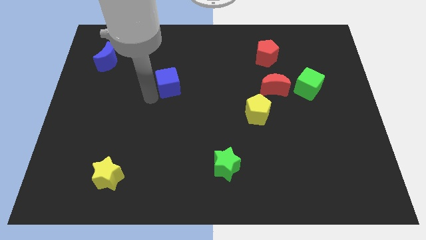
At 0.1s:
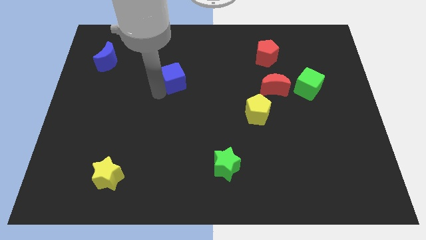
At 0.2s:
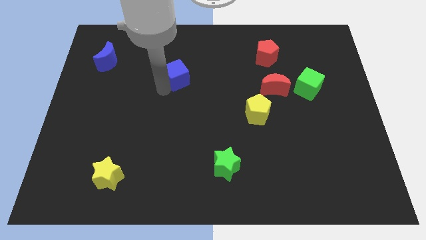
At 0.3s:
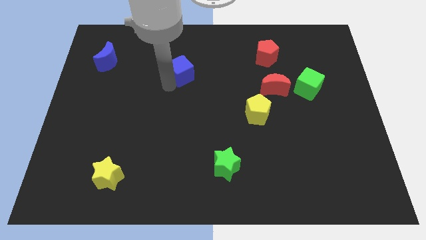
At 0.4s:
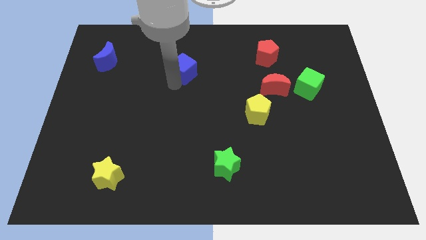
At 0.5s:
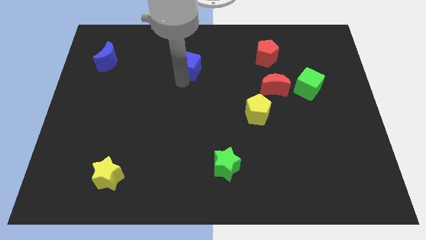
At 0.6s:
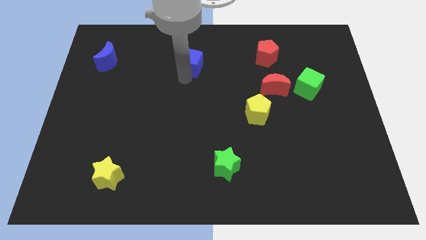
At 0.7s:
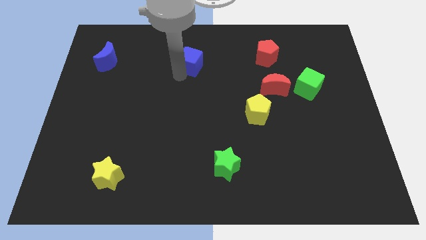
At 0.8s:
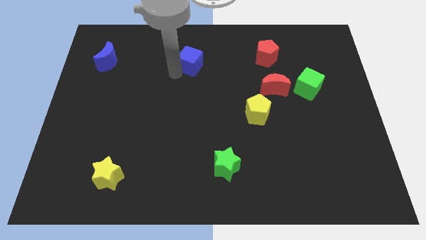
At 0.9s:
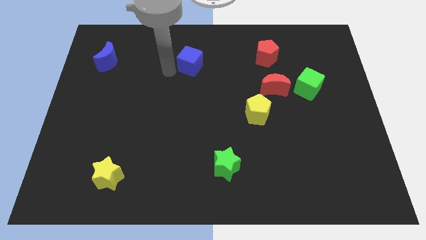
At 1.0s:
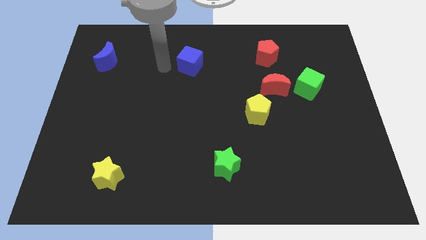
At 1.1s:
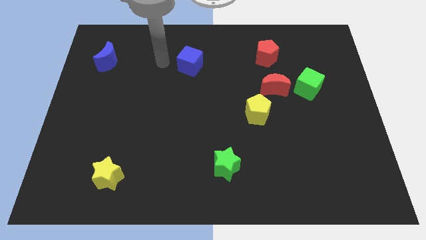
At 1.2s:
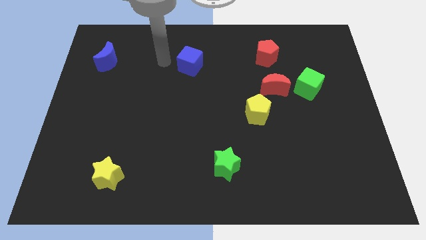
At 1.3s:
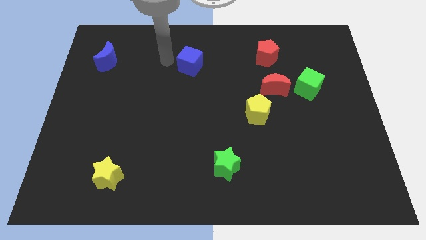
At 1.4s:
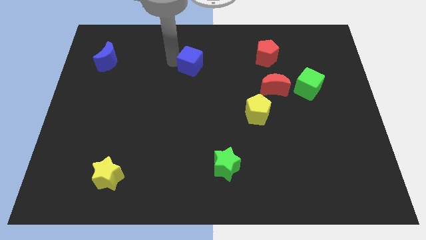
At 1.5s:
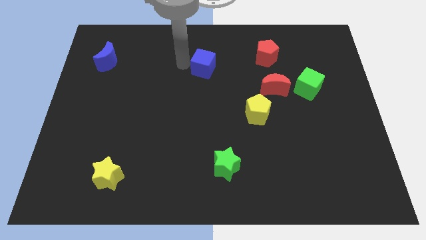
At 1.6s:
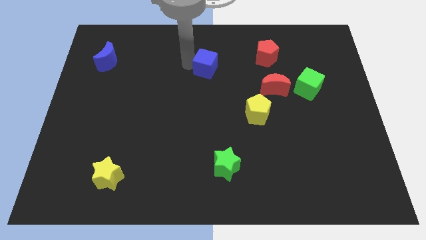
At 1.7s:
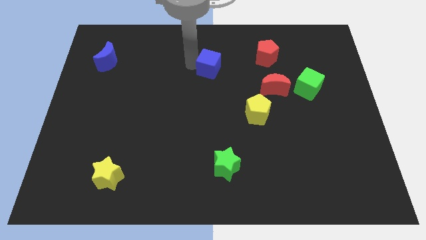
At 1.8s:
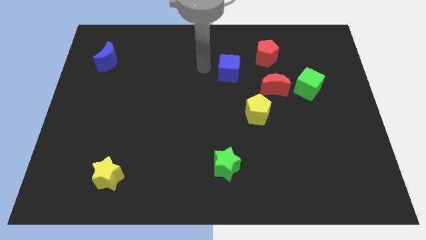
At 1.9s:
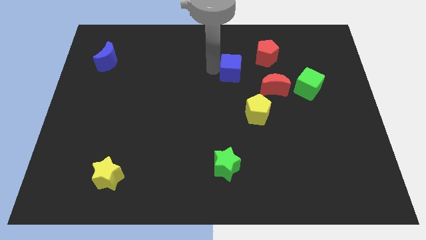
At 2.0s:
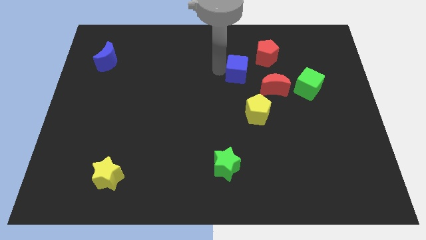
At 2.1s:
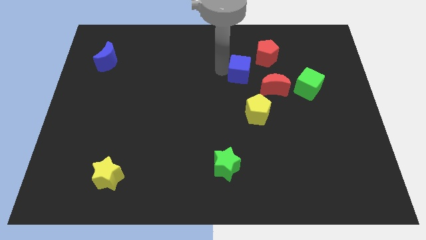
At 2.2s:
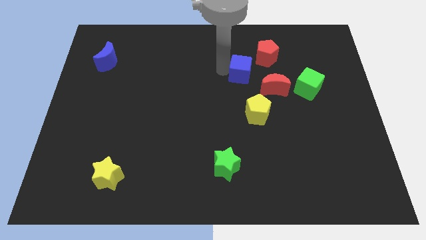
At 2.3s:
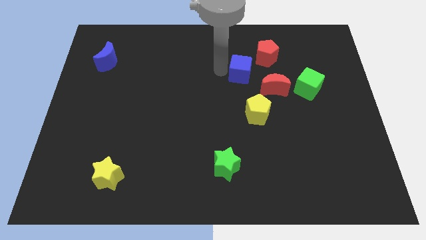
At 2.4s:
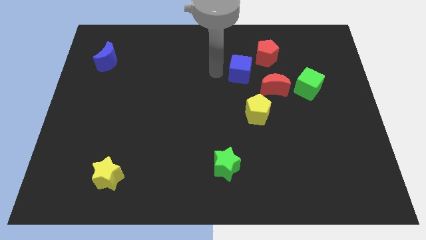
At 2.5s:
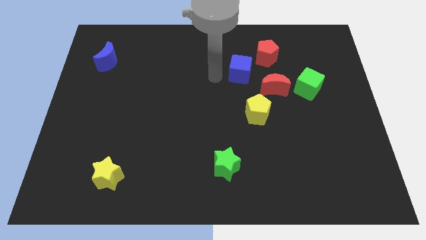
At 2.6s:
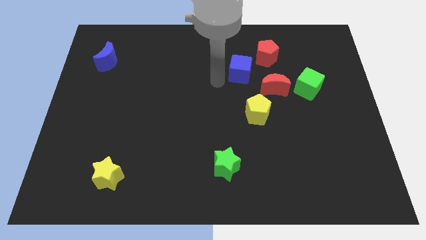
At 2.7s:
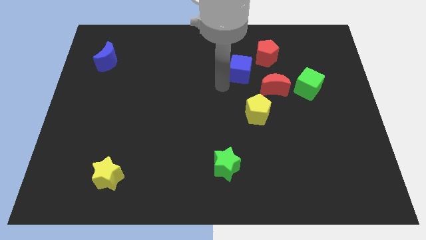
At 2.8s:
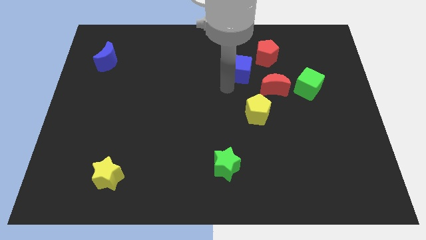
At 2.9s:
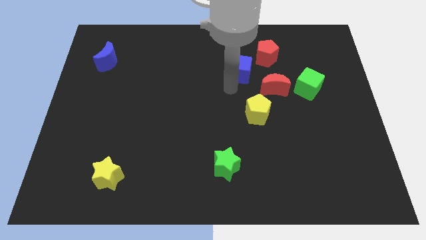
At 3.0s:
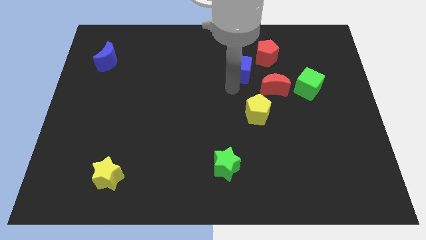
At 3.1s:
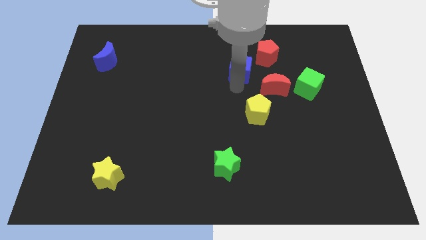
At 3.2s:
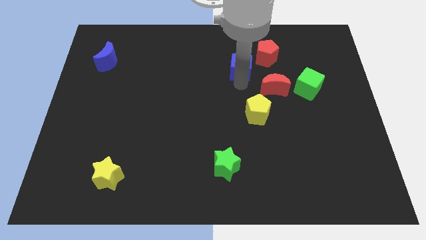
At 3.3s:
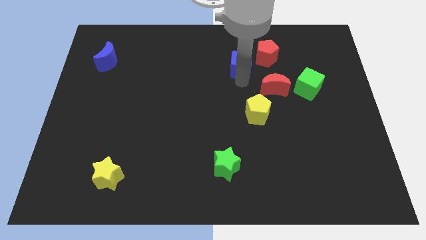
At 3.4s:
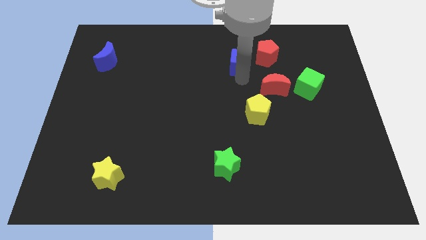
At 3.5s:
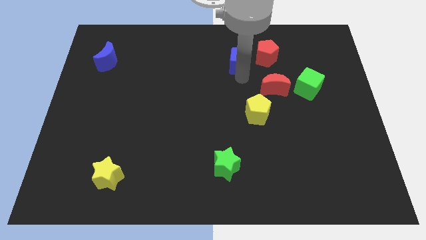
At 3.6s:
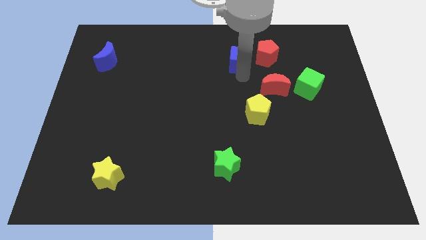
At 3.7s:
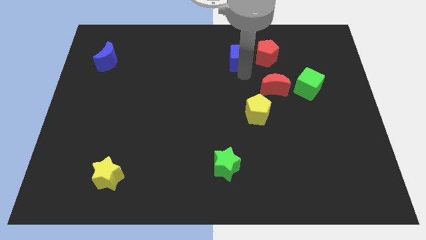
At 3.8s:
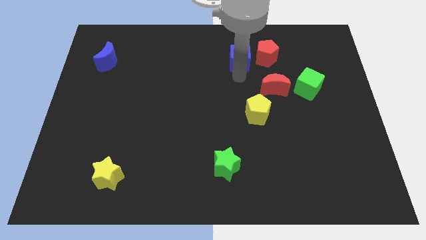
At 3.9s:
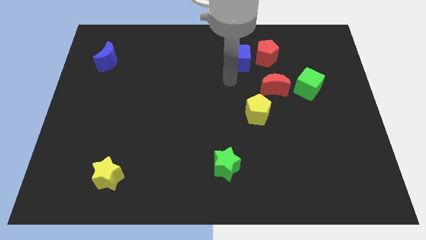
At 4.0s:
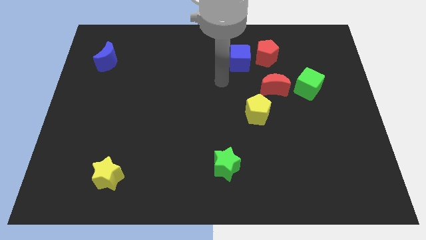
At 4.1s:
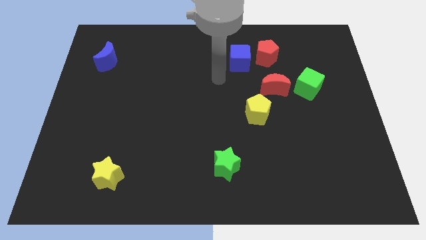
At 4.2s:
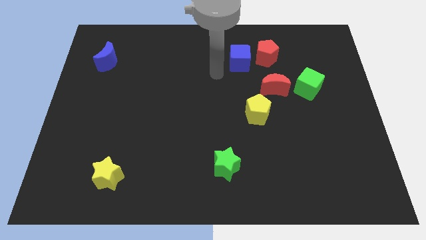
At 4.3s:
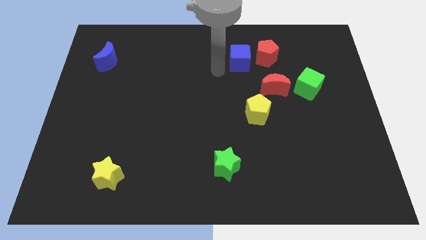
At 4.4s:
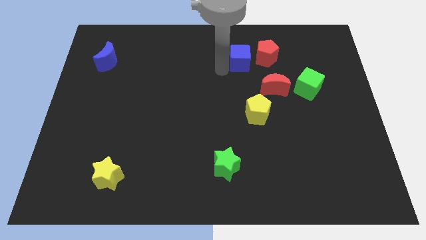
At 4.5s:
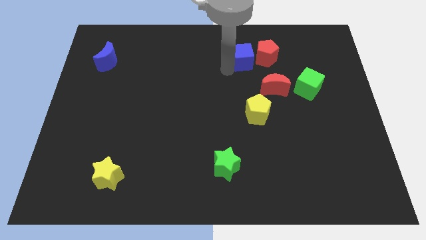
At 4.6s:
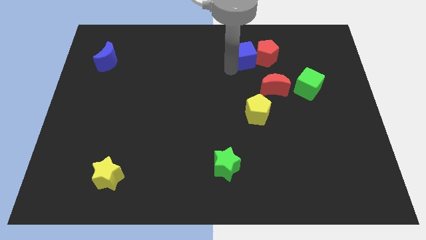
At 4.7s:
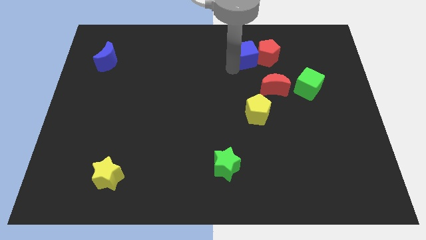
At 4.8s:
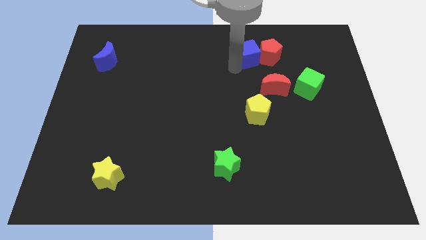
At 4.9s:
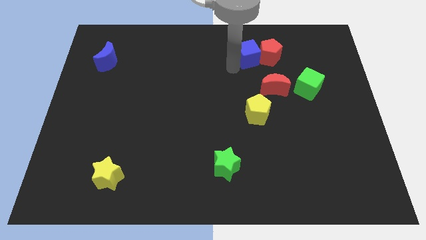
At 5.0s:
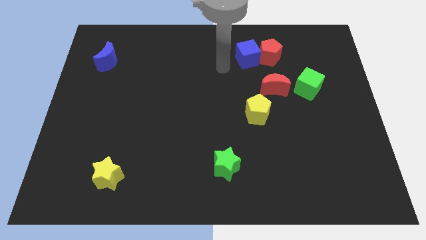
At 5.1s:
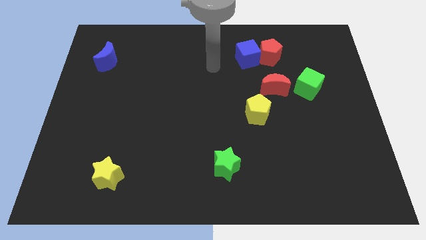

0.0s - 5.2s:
push the blue cube to the left side of the red pentagon

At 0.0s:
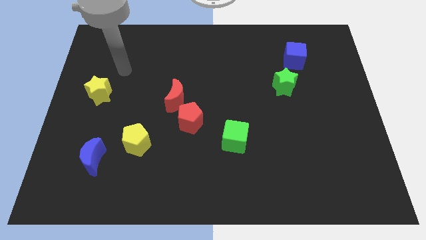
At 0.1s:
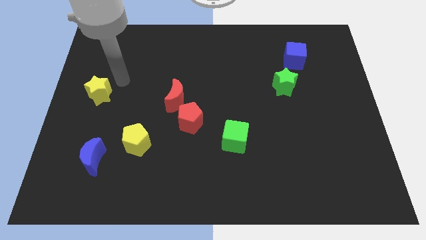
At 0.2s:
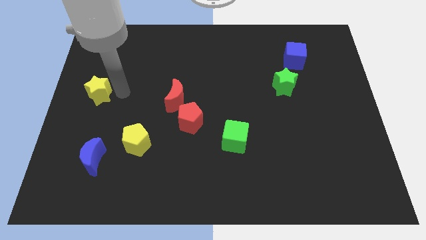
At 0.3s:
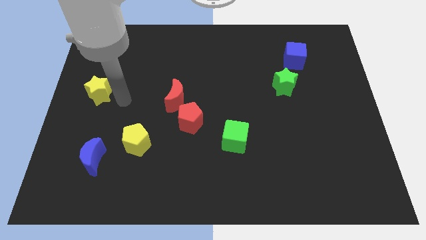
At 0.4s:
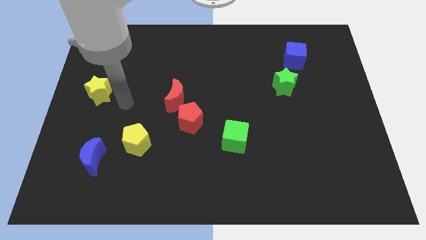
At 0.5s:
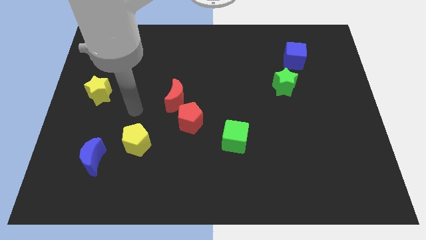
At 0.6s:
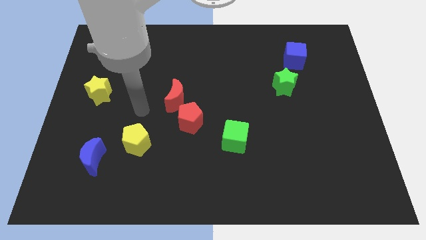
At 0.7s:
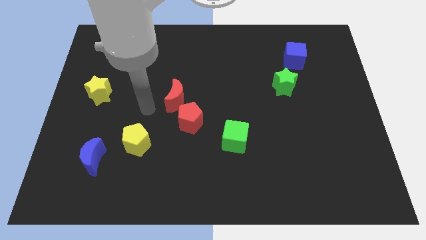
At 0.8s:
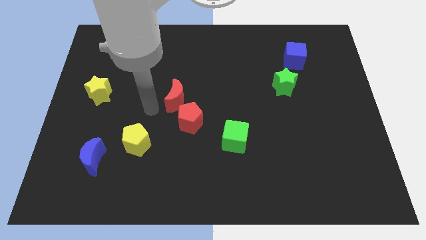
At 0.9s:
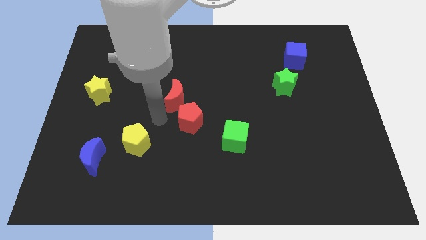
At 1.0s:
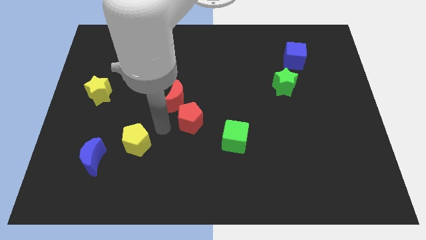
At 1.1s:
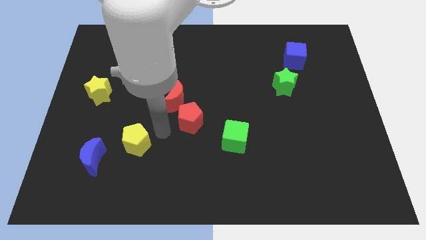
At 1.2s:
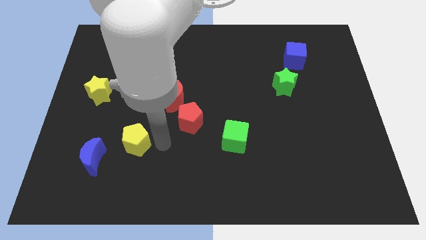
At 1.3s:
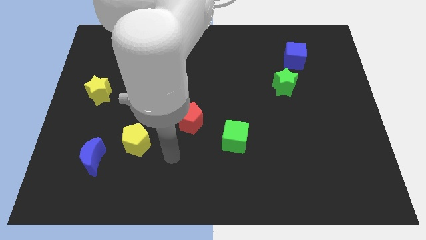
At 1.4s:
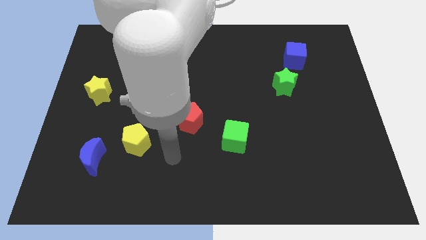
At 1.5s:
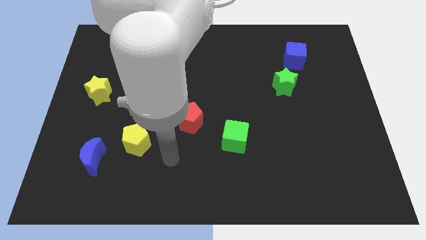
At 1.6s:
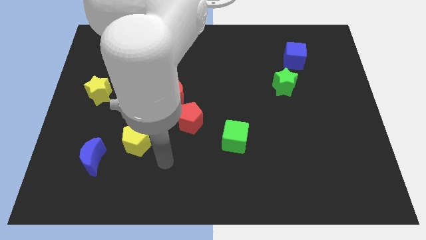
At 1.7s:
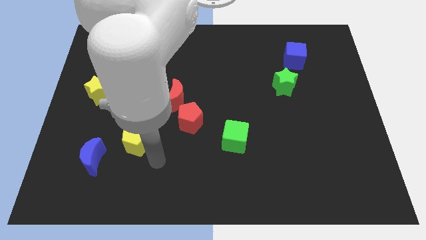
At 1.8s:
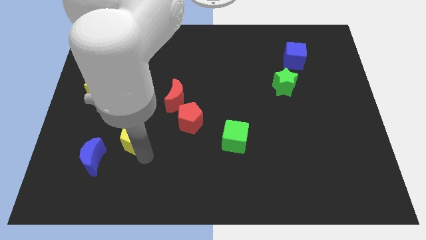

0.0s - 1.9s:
place your hand below the yellow pentagon

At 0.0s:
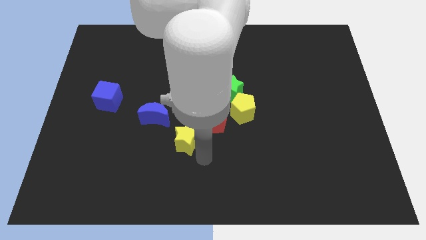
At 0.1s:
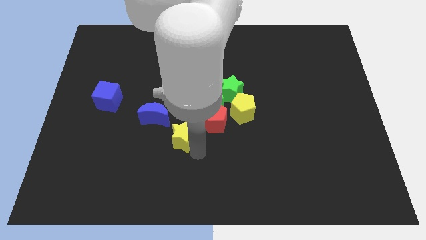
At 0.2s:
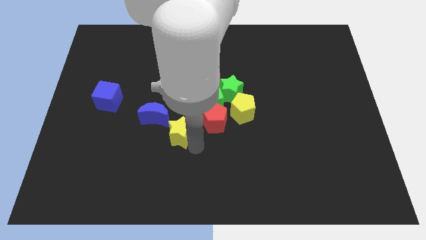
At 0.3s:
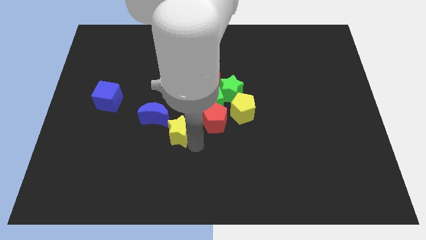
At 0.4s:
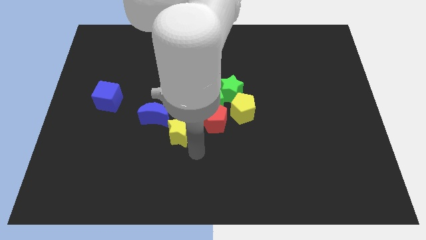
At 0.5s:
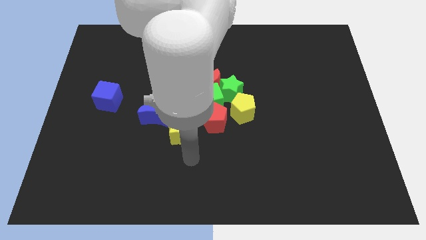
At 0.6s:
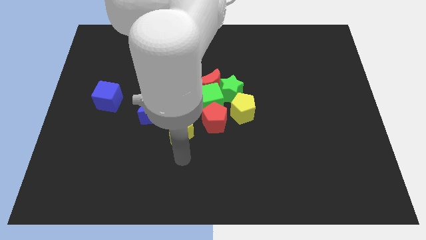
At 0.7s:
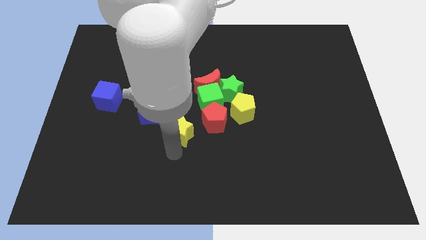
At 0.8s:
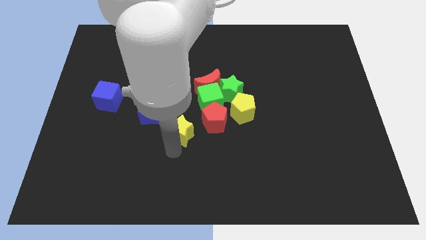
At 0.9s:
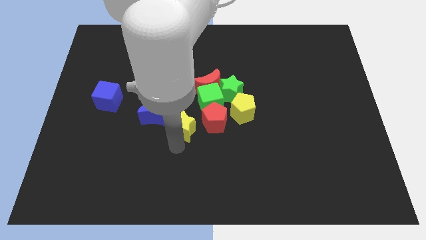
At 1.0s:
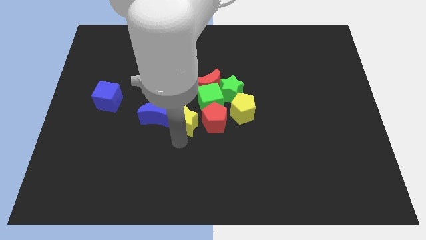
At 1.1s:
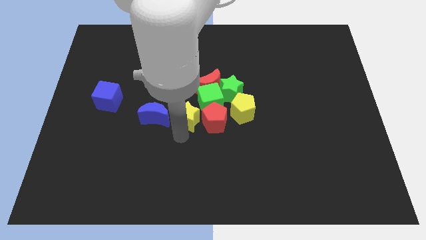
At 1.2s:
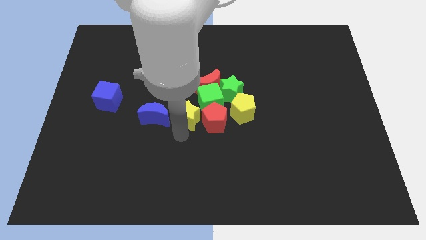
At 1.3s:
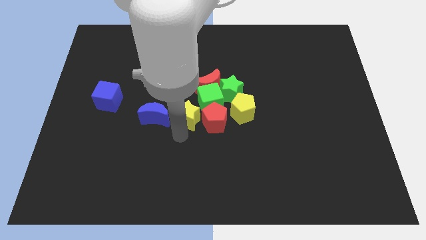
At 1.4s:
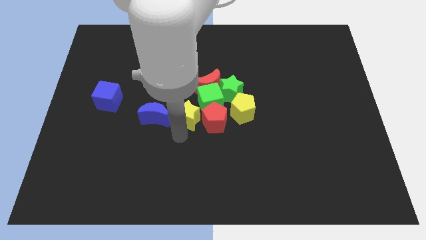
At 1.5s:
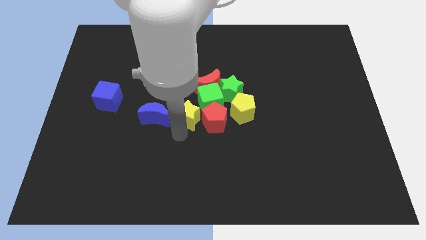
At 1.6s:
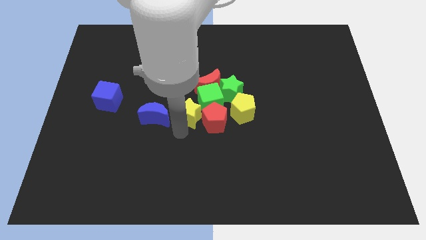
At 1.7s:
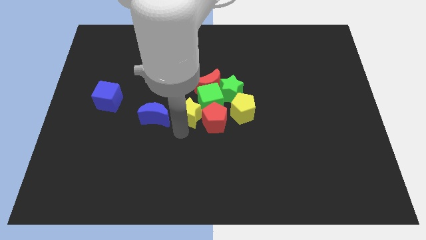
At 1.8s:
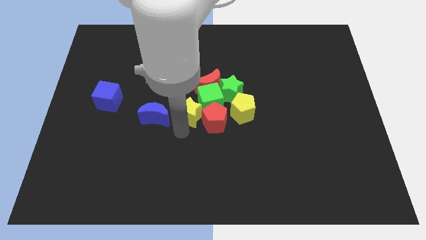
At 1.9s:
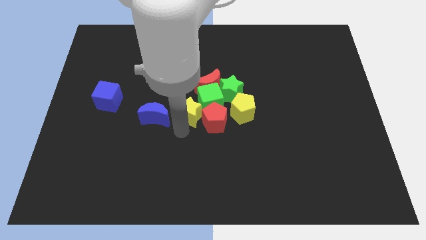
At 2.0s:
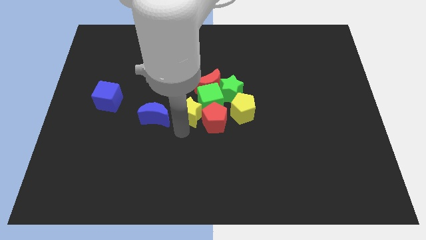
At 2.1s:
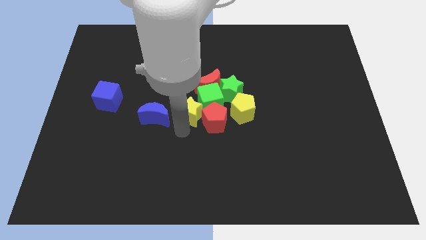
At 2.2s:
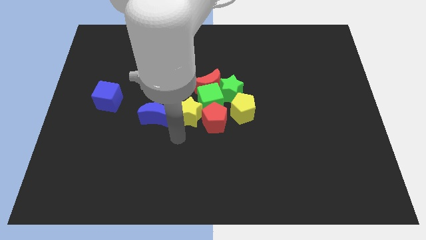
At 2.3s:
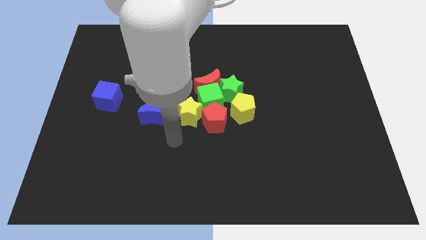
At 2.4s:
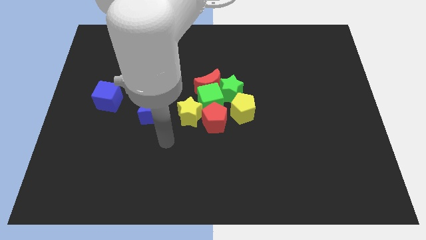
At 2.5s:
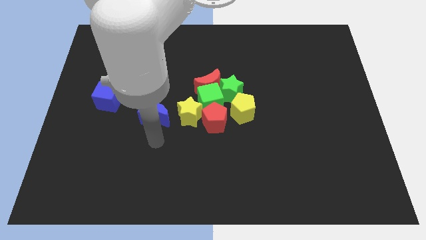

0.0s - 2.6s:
place the yellow star near the red pentagon
